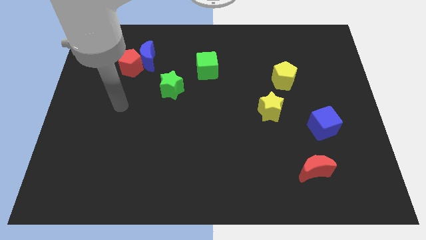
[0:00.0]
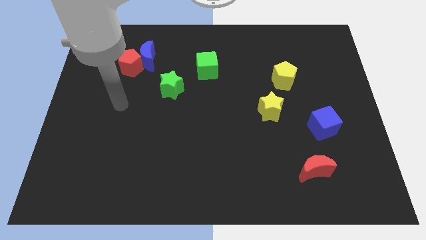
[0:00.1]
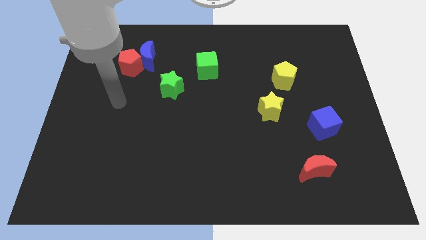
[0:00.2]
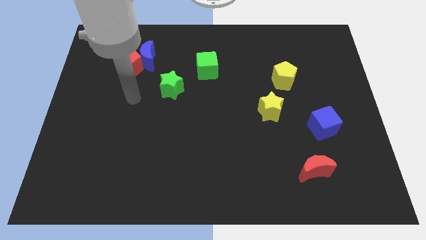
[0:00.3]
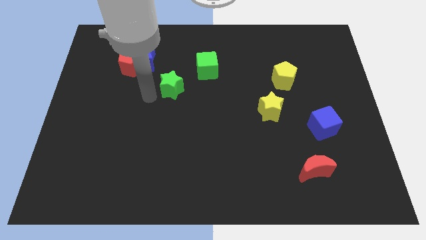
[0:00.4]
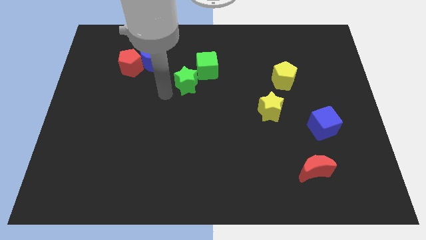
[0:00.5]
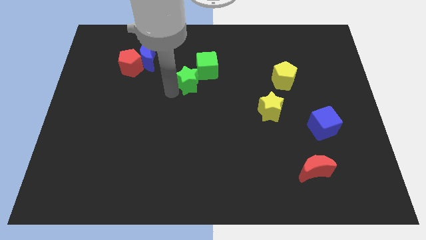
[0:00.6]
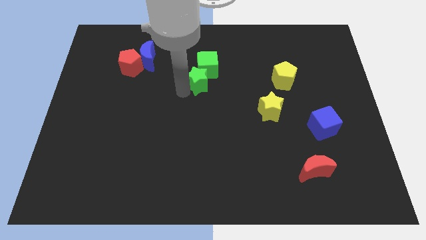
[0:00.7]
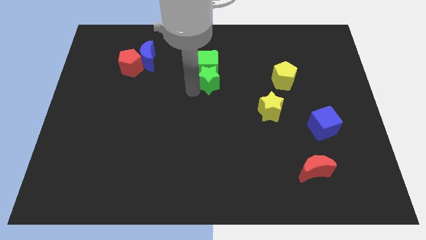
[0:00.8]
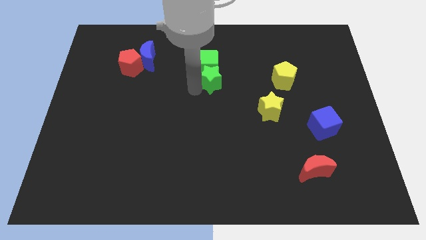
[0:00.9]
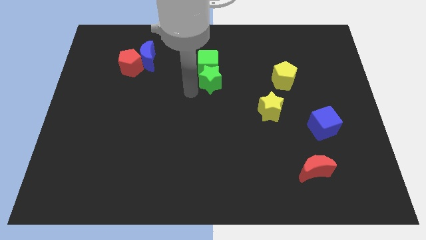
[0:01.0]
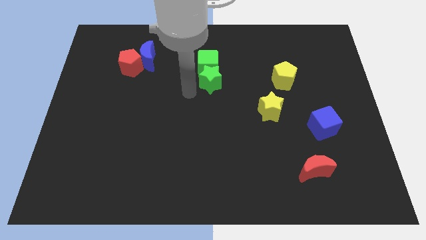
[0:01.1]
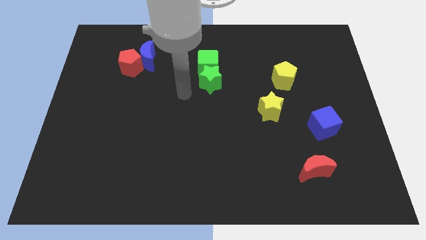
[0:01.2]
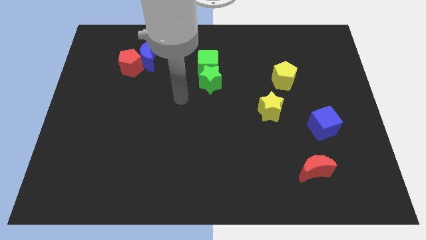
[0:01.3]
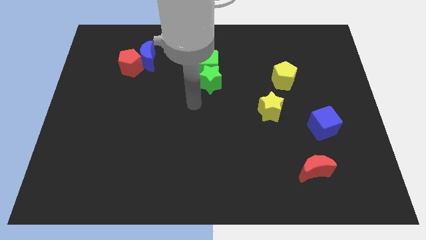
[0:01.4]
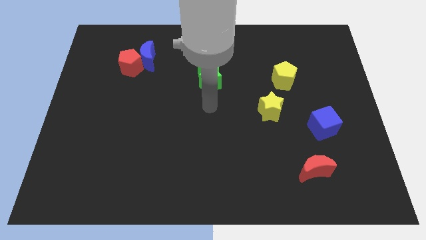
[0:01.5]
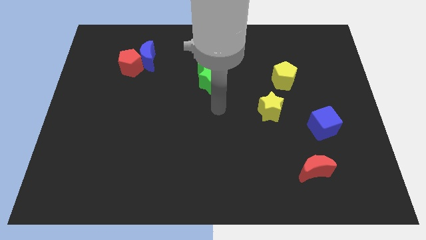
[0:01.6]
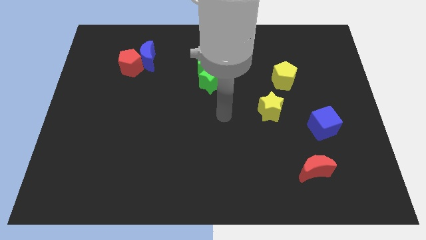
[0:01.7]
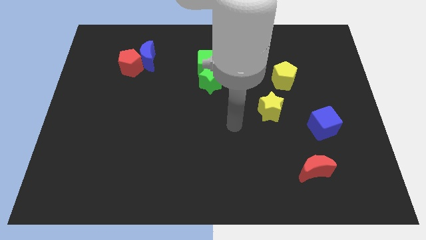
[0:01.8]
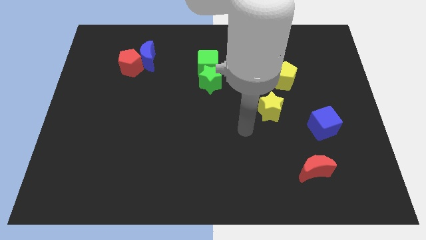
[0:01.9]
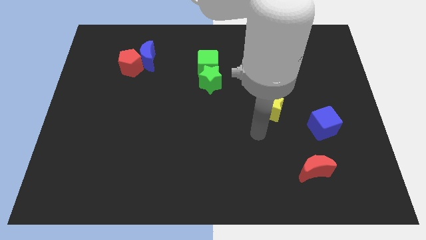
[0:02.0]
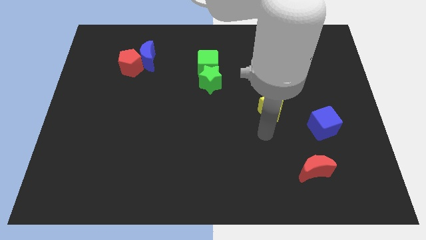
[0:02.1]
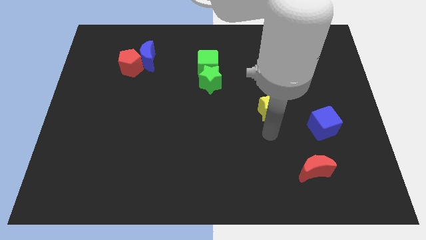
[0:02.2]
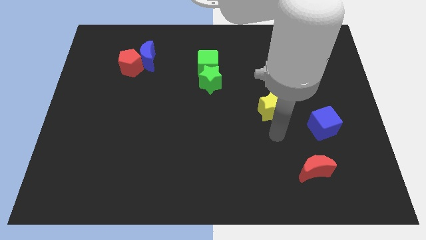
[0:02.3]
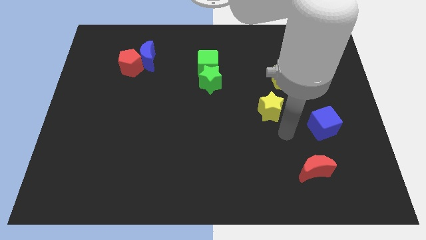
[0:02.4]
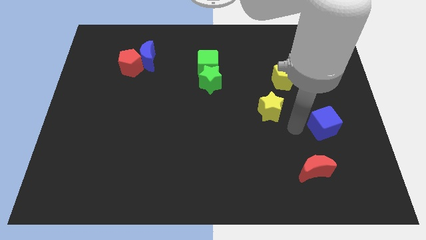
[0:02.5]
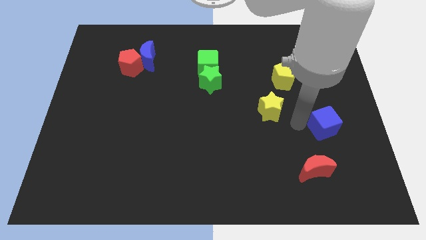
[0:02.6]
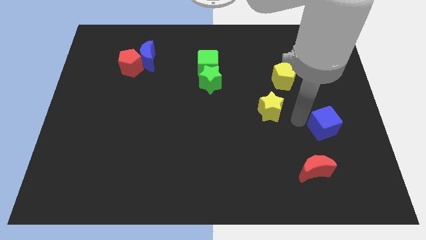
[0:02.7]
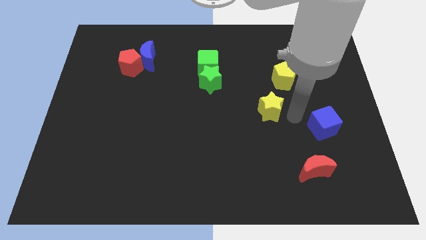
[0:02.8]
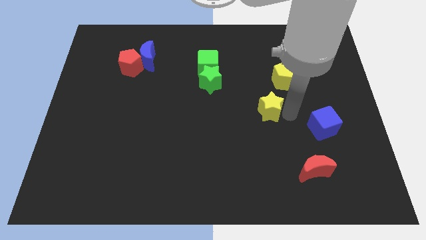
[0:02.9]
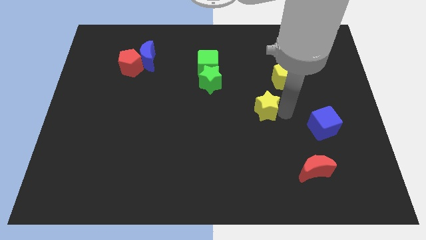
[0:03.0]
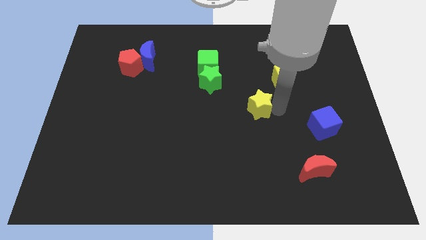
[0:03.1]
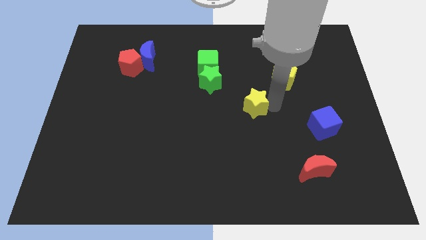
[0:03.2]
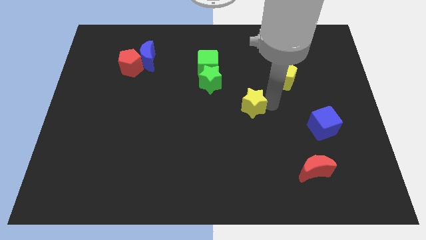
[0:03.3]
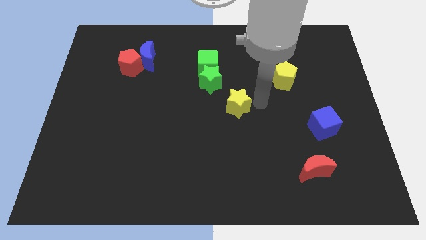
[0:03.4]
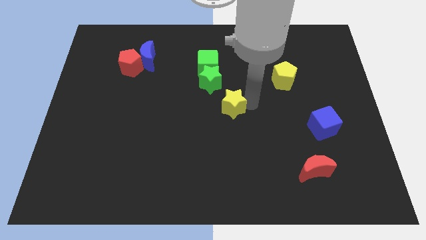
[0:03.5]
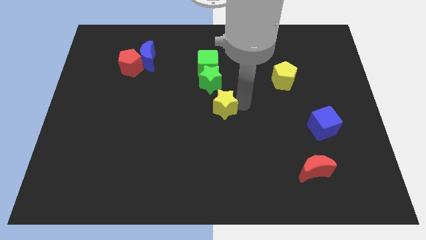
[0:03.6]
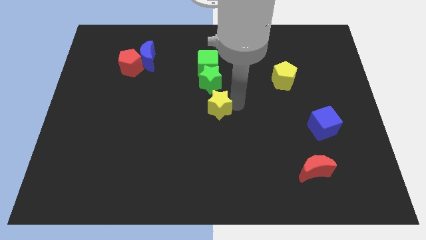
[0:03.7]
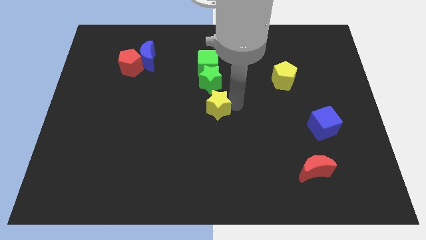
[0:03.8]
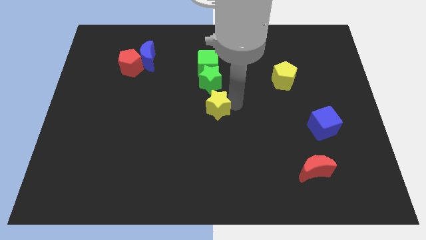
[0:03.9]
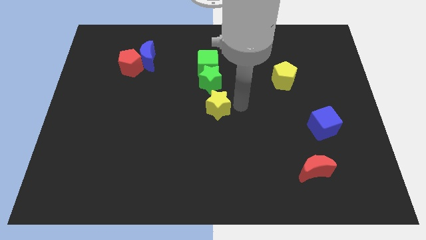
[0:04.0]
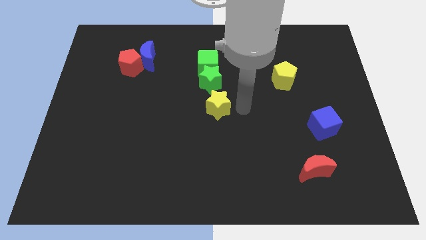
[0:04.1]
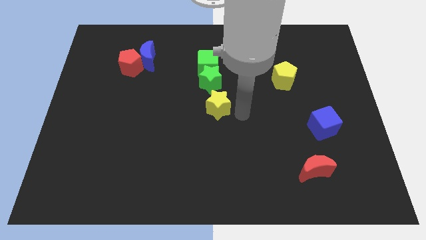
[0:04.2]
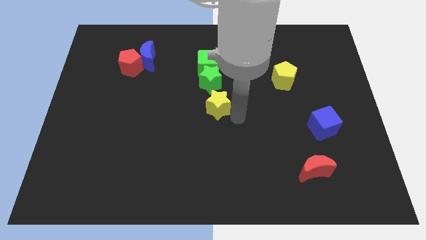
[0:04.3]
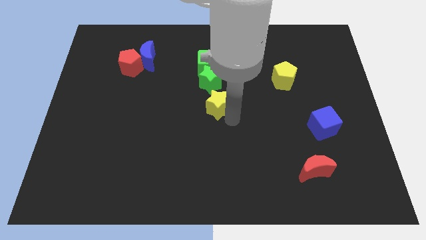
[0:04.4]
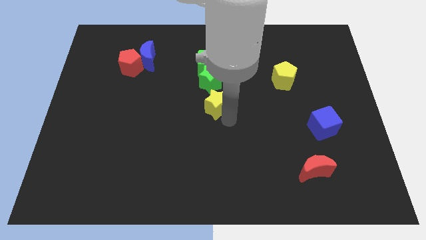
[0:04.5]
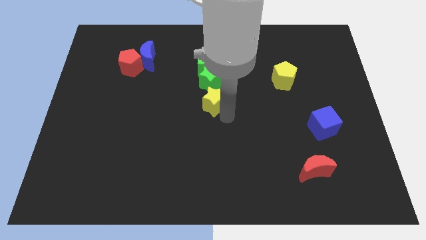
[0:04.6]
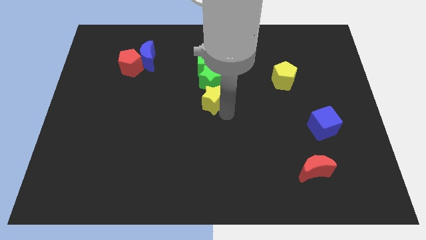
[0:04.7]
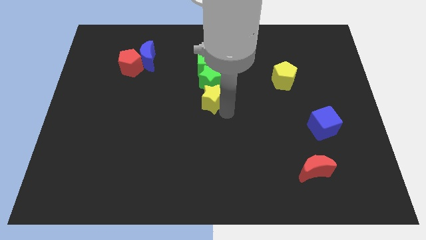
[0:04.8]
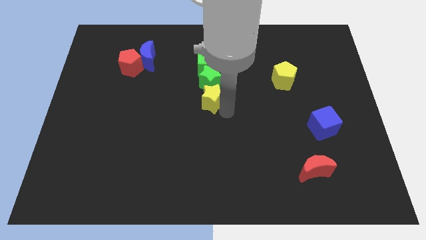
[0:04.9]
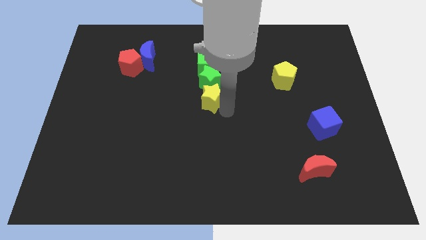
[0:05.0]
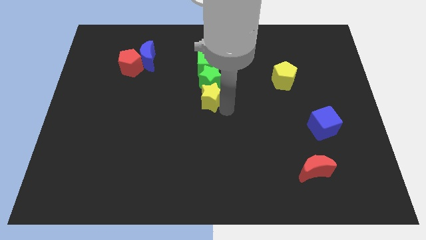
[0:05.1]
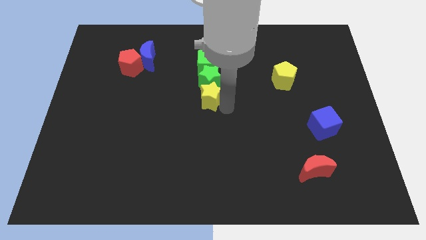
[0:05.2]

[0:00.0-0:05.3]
push the yellow star into the green star

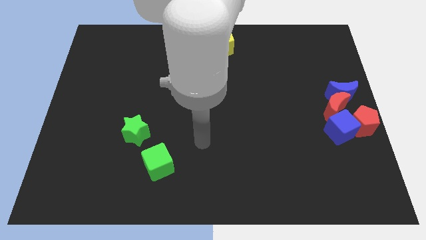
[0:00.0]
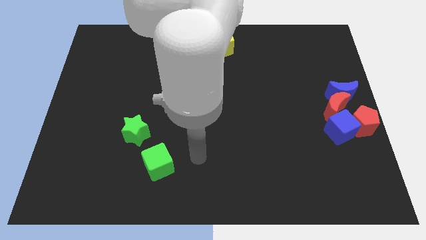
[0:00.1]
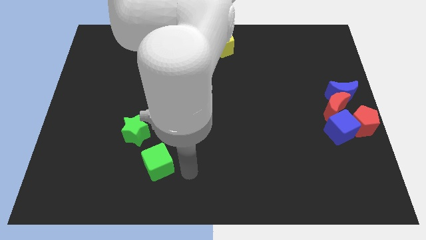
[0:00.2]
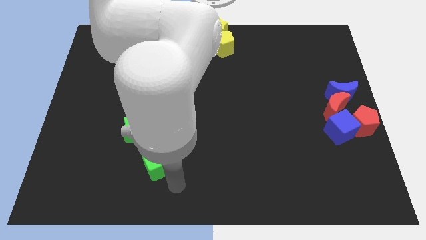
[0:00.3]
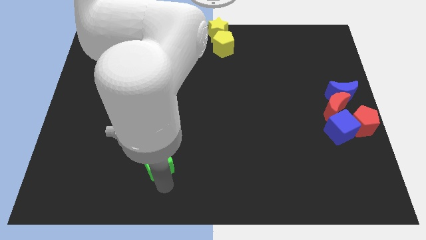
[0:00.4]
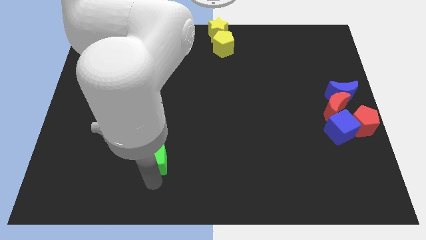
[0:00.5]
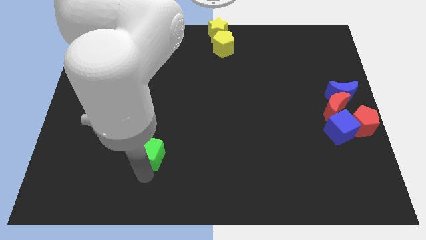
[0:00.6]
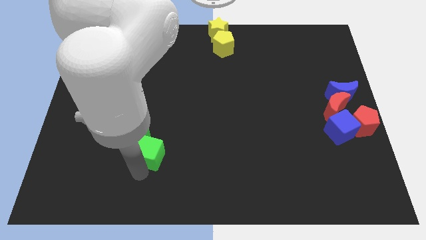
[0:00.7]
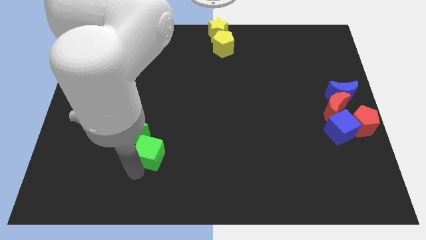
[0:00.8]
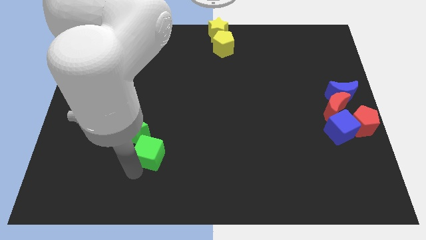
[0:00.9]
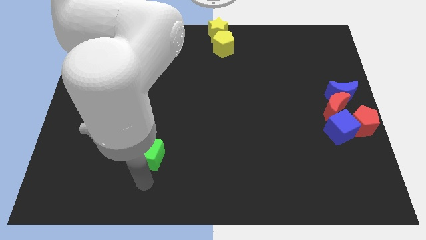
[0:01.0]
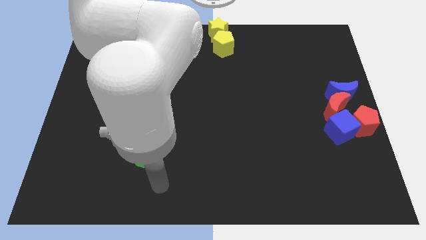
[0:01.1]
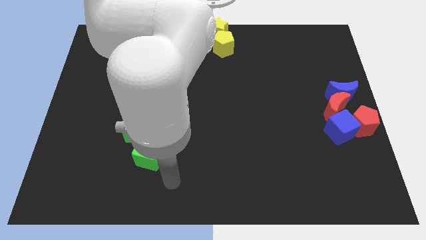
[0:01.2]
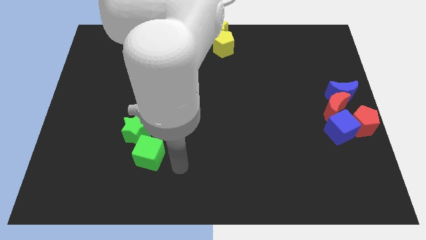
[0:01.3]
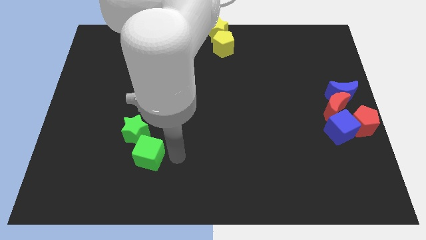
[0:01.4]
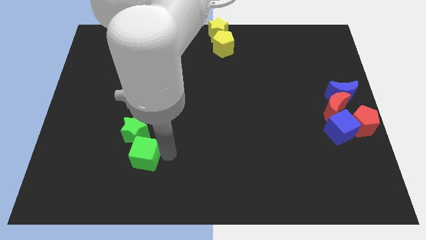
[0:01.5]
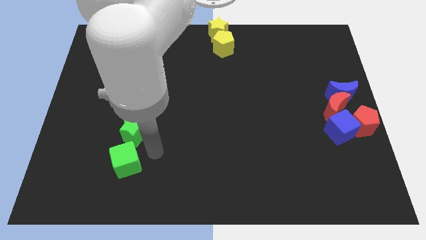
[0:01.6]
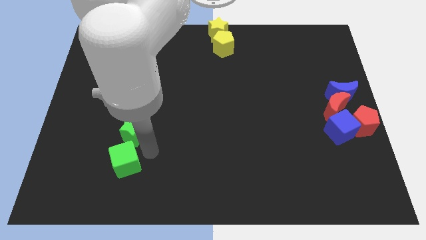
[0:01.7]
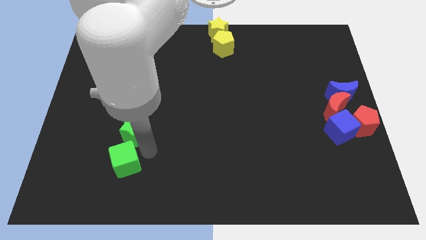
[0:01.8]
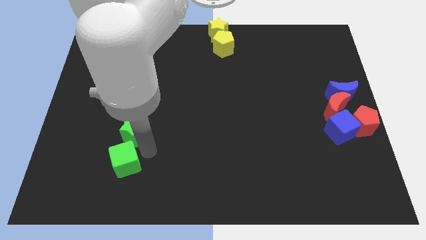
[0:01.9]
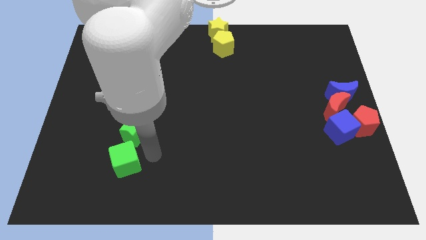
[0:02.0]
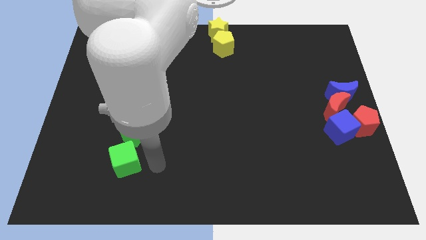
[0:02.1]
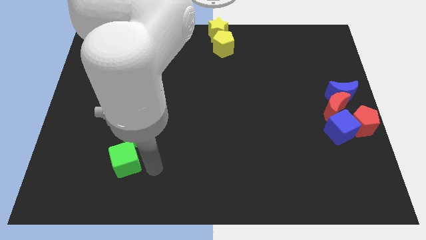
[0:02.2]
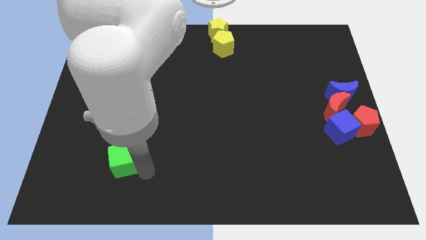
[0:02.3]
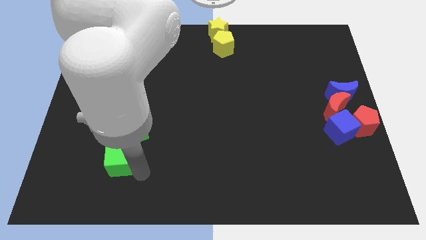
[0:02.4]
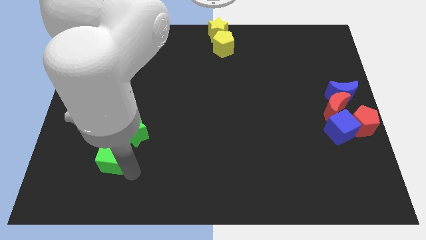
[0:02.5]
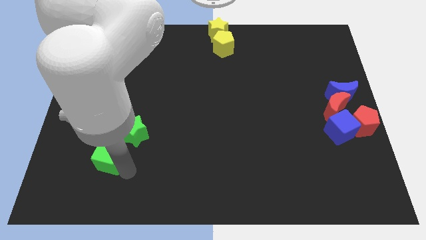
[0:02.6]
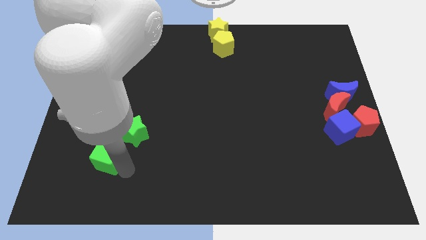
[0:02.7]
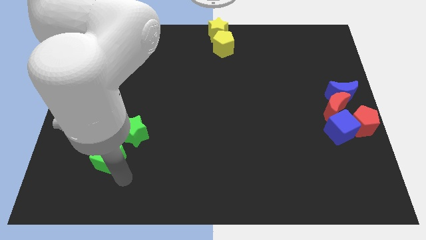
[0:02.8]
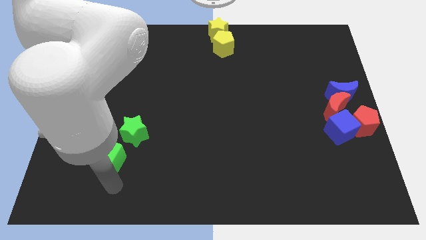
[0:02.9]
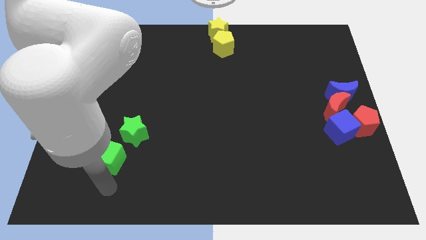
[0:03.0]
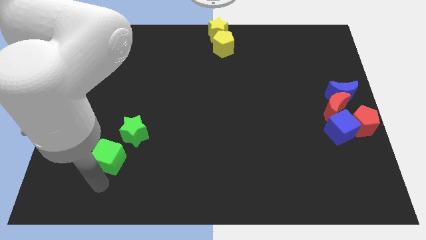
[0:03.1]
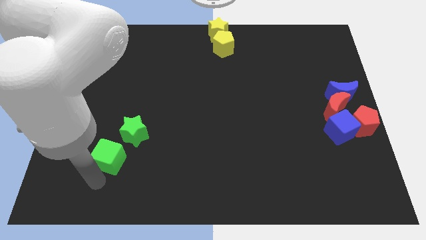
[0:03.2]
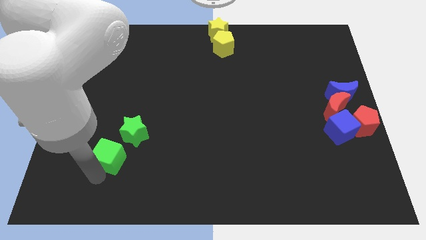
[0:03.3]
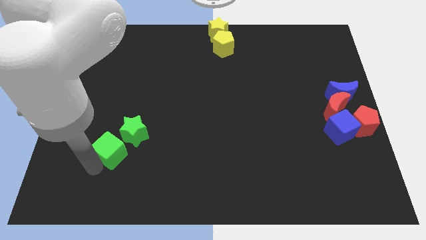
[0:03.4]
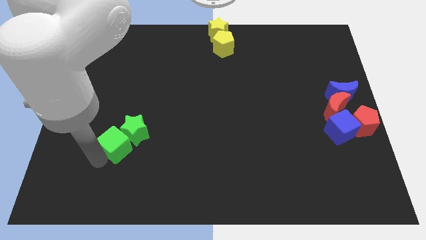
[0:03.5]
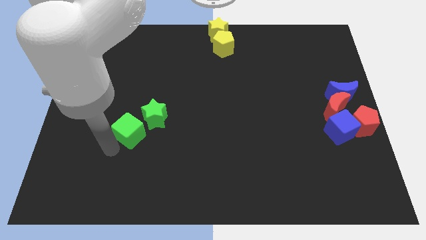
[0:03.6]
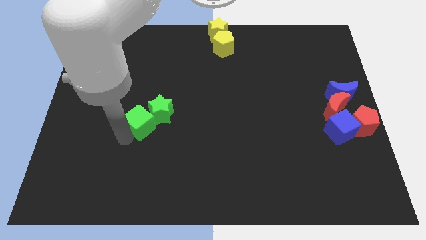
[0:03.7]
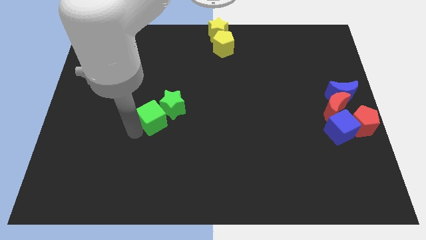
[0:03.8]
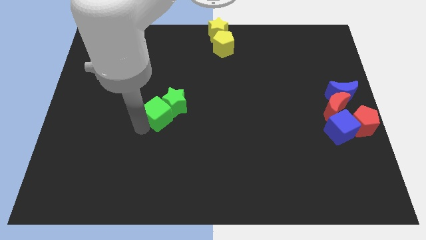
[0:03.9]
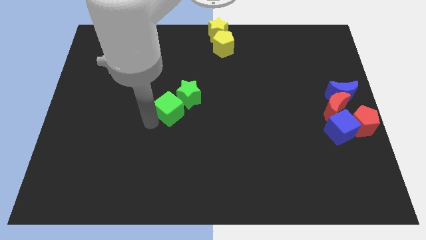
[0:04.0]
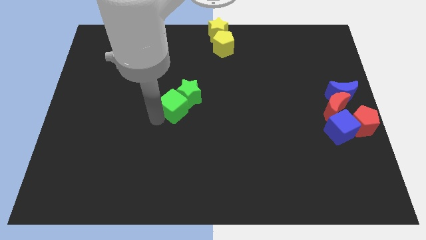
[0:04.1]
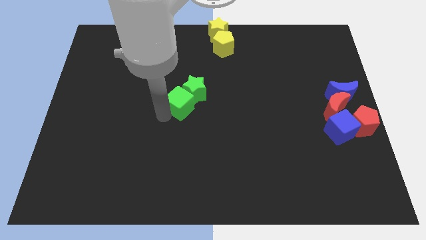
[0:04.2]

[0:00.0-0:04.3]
slightly push the green cube to the left side of the board
